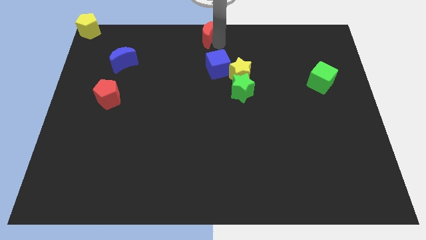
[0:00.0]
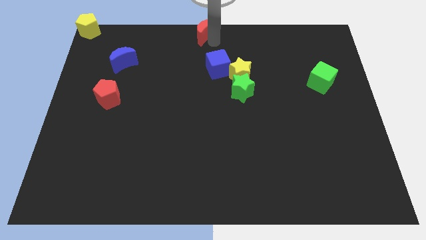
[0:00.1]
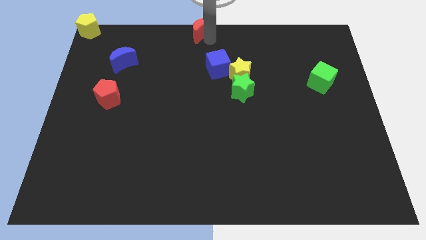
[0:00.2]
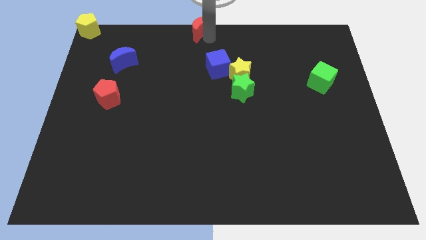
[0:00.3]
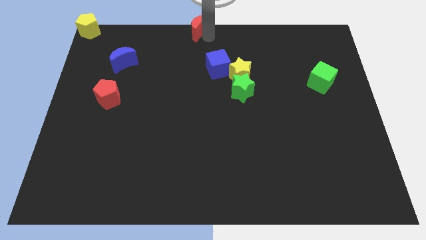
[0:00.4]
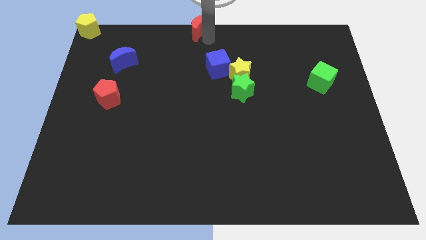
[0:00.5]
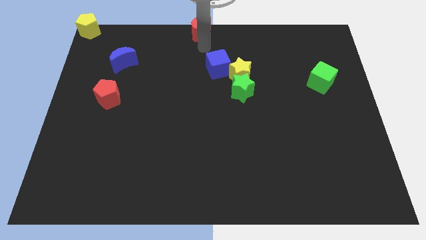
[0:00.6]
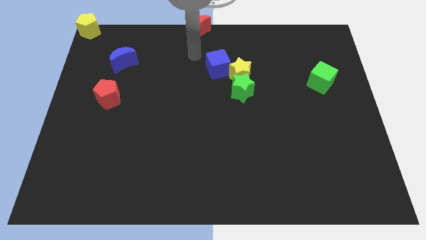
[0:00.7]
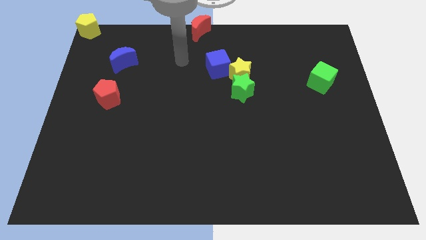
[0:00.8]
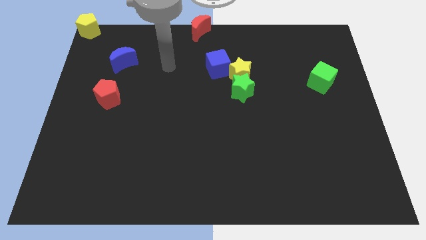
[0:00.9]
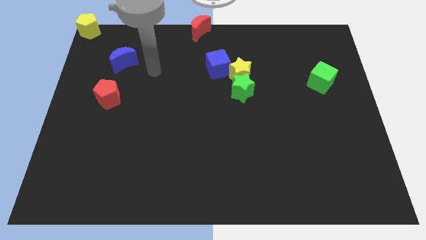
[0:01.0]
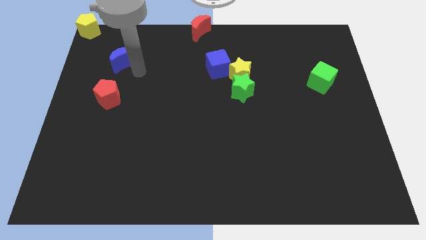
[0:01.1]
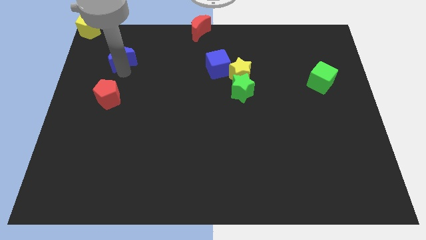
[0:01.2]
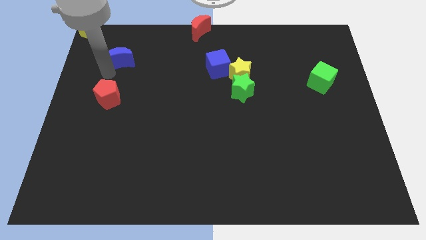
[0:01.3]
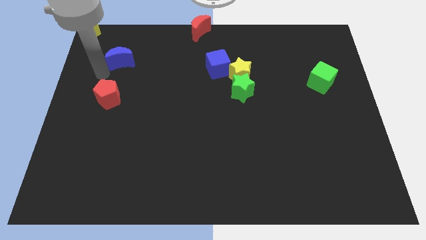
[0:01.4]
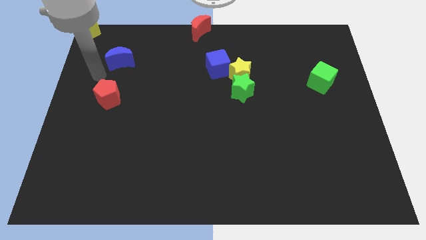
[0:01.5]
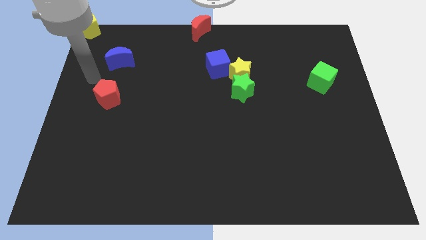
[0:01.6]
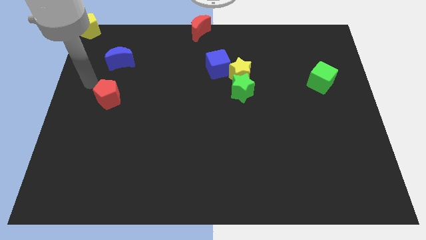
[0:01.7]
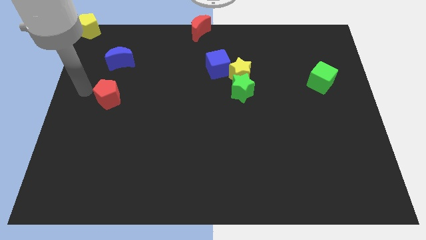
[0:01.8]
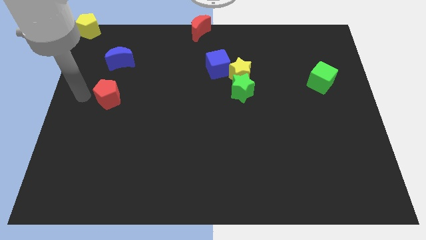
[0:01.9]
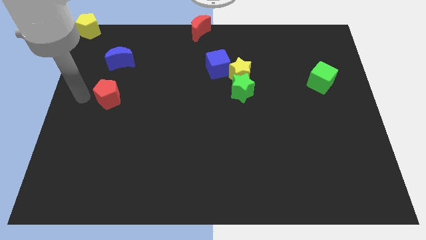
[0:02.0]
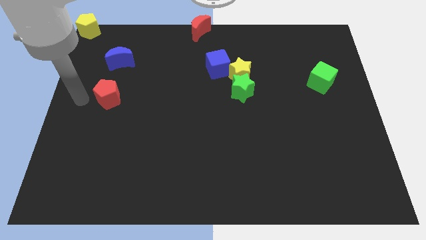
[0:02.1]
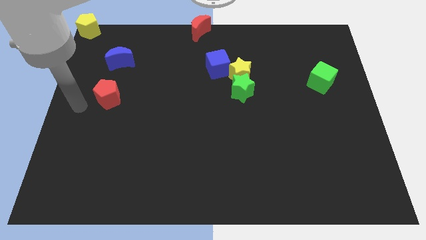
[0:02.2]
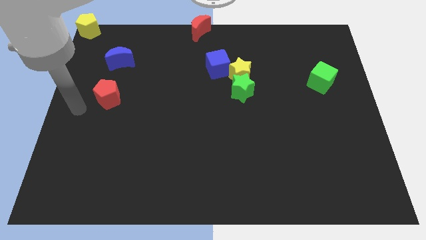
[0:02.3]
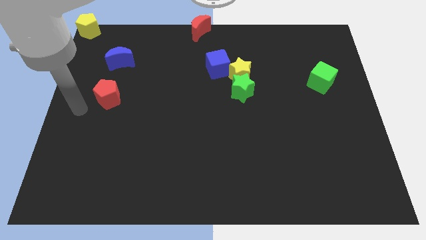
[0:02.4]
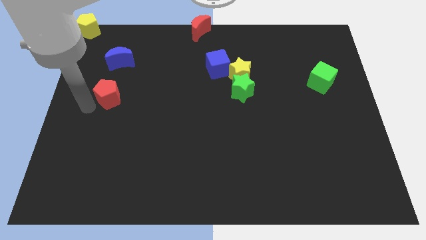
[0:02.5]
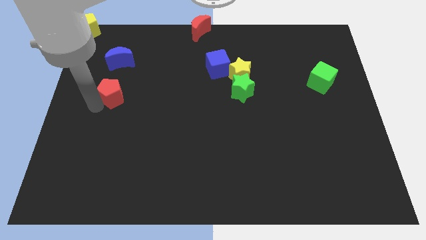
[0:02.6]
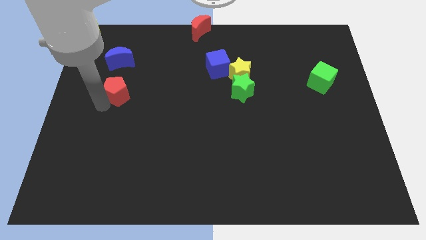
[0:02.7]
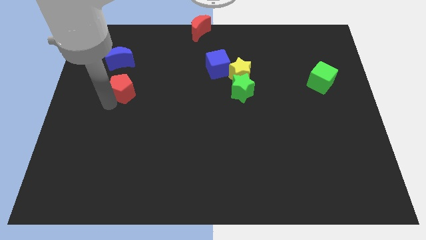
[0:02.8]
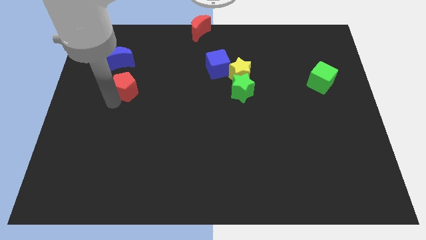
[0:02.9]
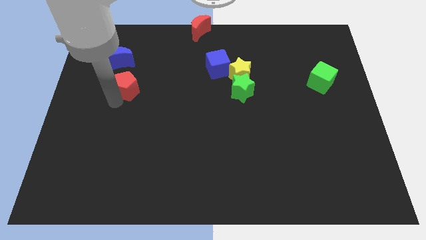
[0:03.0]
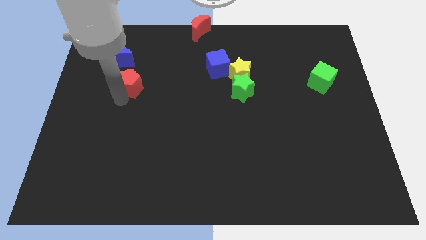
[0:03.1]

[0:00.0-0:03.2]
place red pentagon below blue crescent

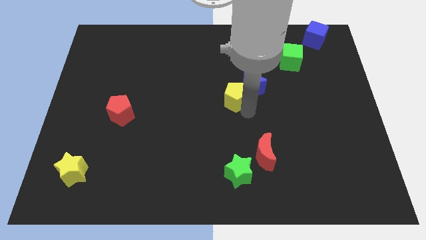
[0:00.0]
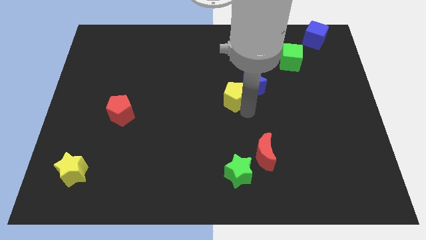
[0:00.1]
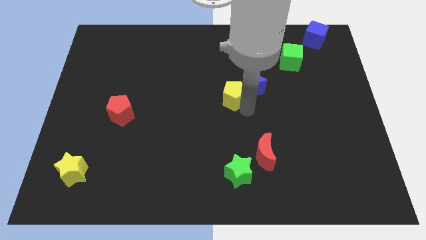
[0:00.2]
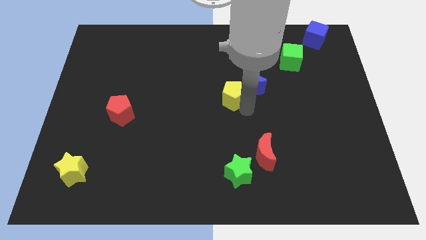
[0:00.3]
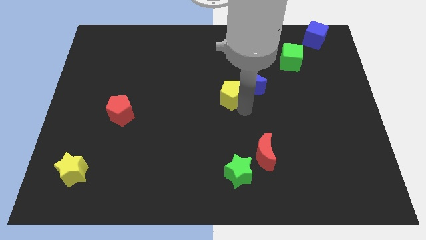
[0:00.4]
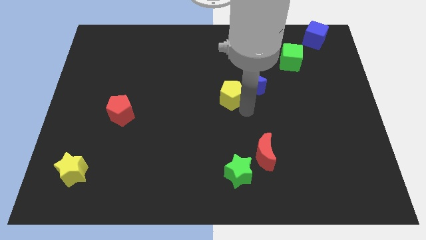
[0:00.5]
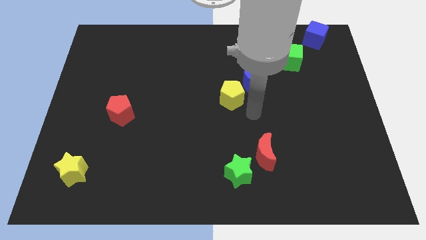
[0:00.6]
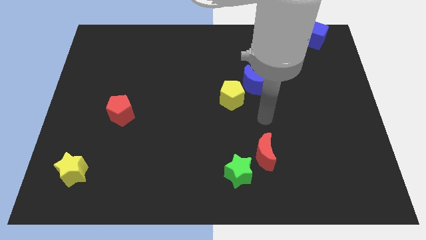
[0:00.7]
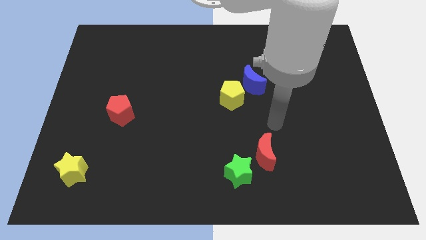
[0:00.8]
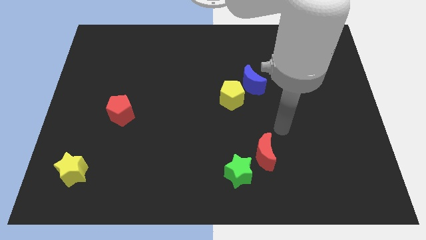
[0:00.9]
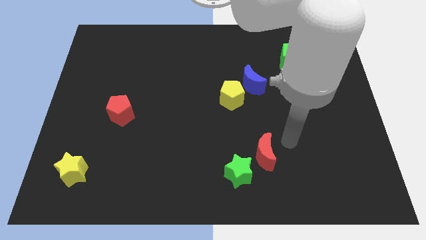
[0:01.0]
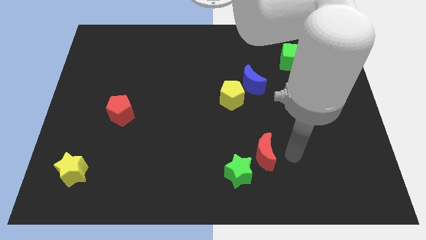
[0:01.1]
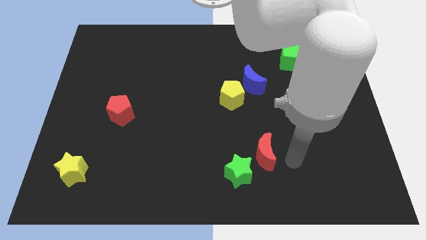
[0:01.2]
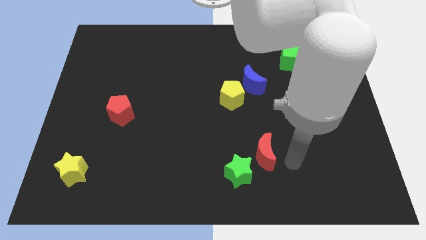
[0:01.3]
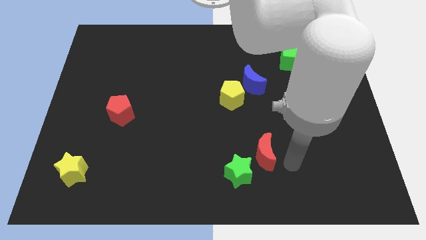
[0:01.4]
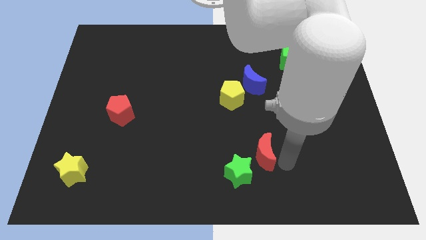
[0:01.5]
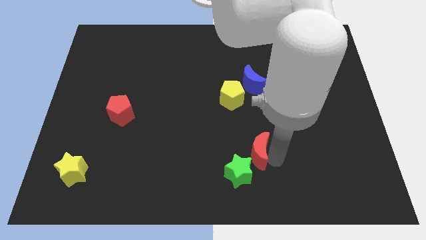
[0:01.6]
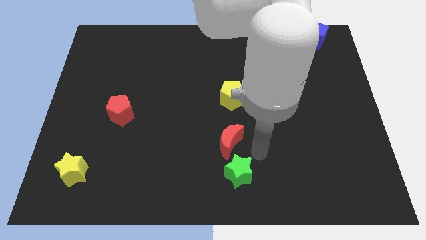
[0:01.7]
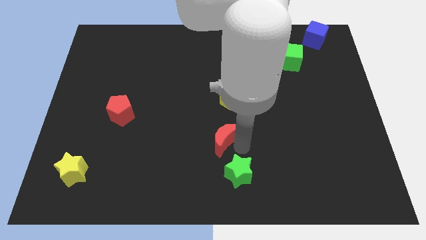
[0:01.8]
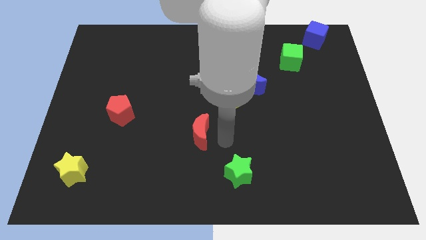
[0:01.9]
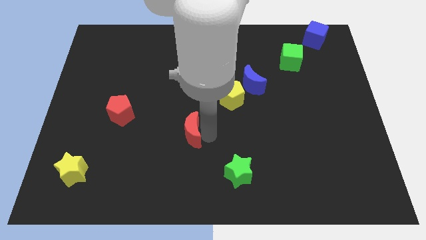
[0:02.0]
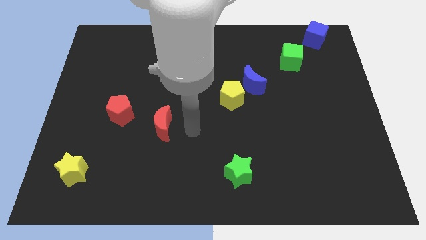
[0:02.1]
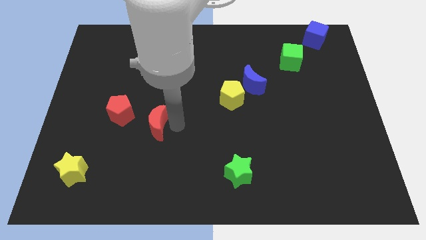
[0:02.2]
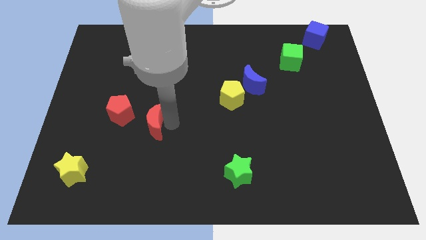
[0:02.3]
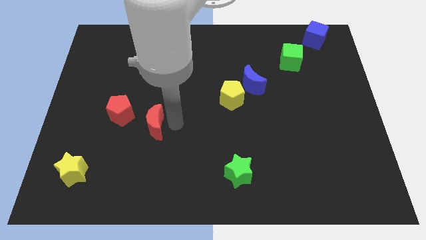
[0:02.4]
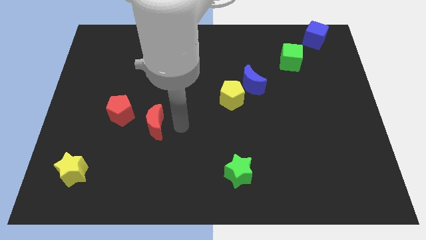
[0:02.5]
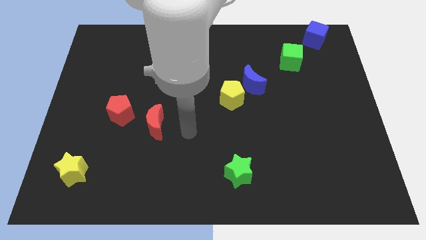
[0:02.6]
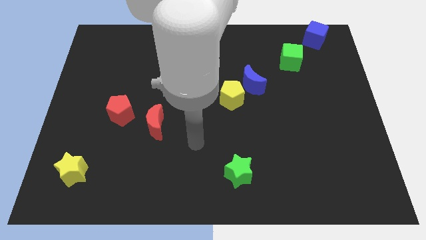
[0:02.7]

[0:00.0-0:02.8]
push the yellow pentagon and move the red moon to the right of red pentagon

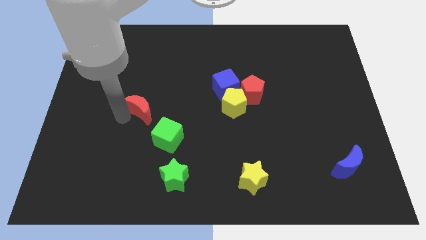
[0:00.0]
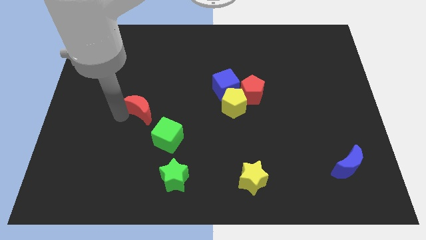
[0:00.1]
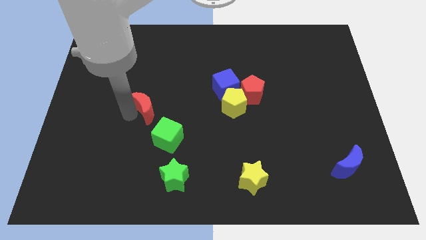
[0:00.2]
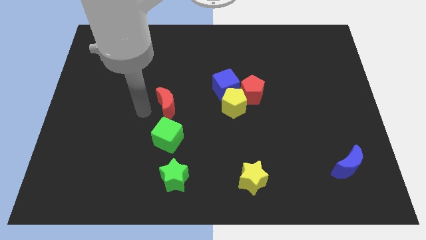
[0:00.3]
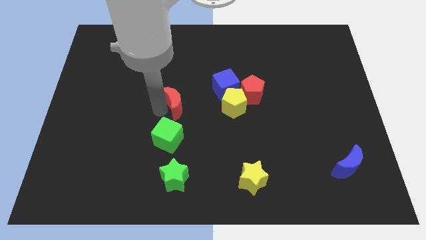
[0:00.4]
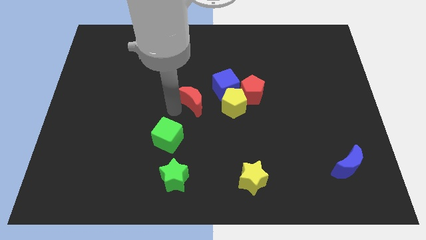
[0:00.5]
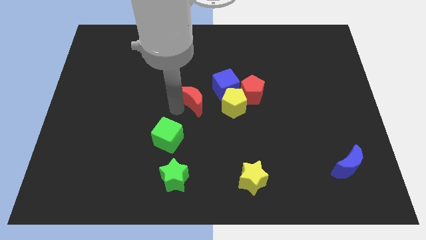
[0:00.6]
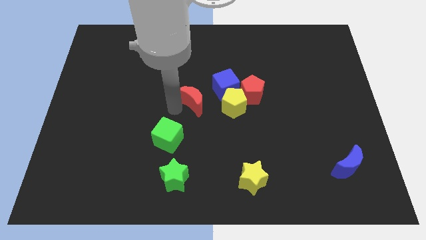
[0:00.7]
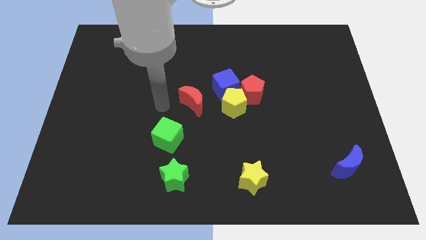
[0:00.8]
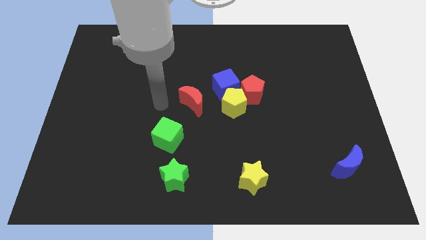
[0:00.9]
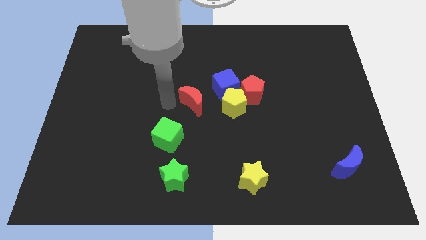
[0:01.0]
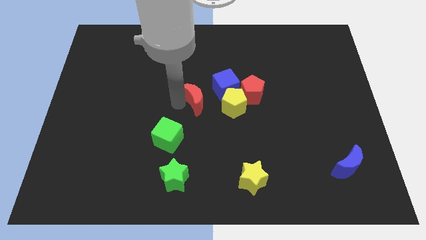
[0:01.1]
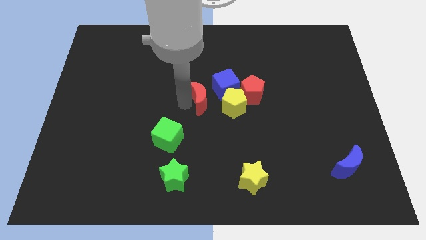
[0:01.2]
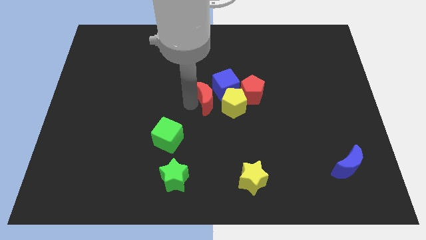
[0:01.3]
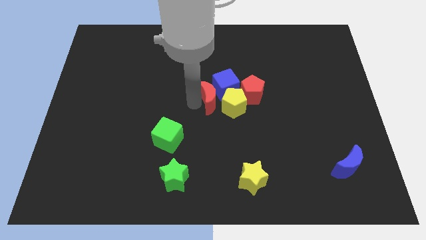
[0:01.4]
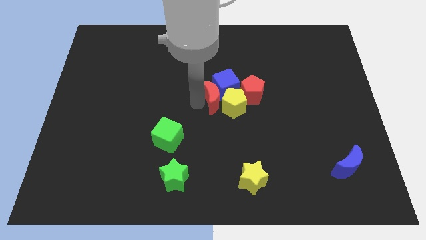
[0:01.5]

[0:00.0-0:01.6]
move the red moon left to the yellow pentagon and blue cube

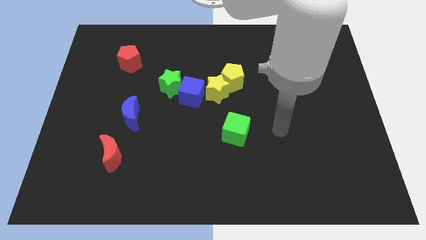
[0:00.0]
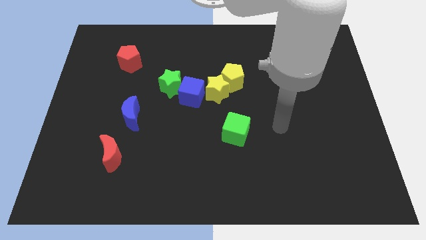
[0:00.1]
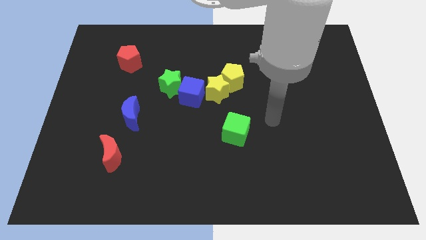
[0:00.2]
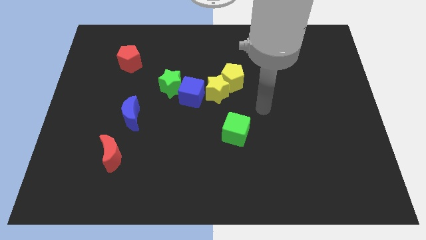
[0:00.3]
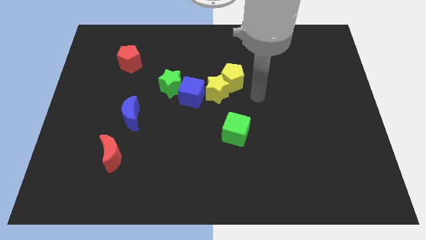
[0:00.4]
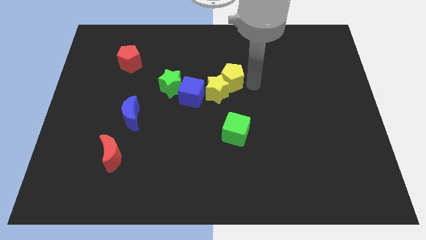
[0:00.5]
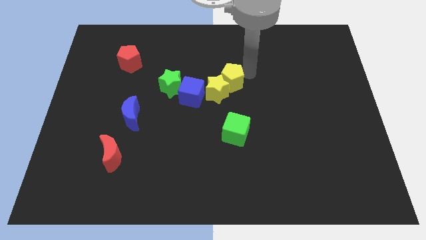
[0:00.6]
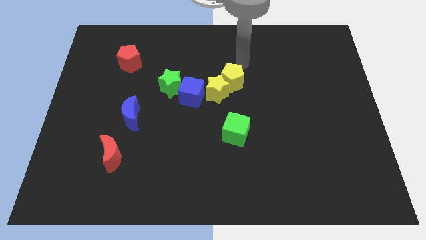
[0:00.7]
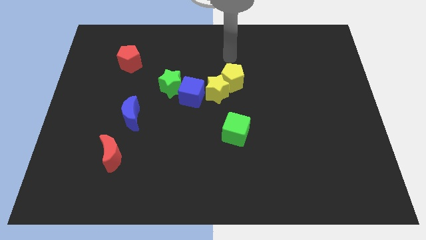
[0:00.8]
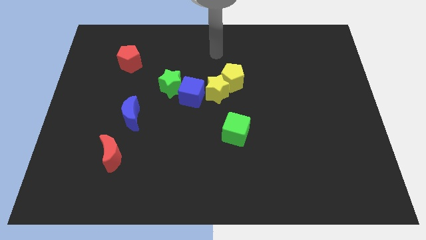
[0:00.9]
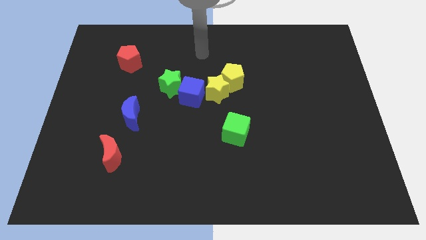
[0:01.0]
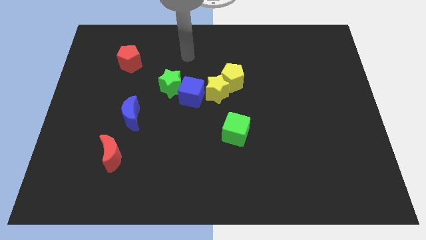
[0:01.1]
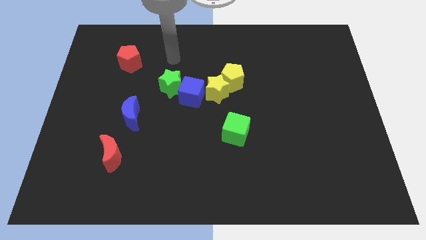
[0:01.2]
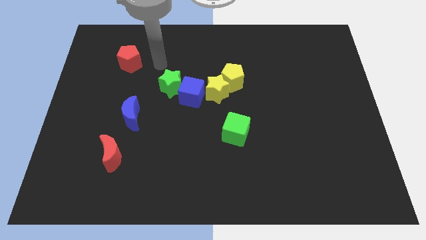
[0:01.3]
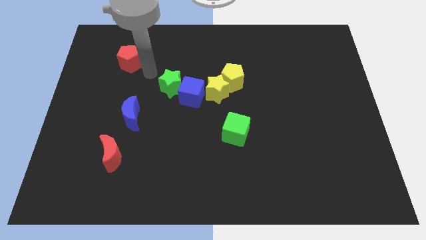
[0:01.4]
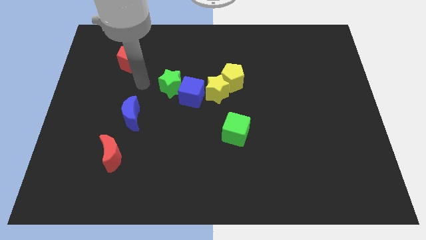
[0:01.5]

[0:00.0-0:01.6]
place your hand in between the red pentagon and
